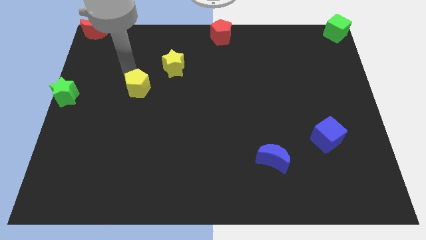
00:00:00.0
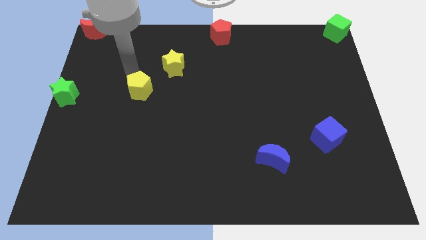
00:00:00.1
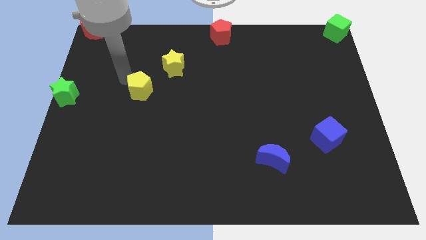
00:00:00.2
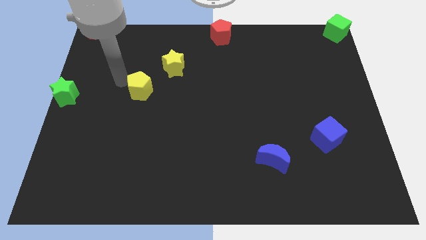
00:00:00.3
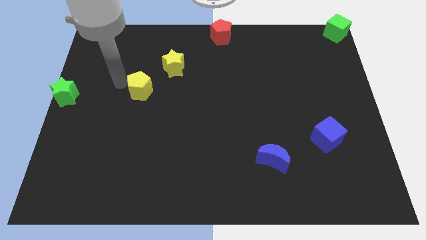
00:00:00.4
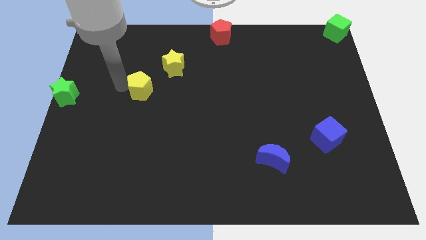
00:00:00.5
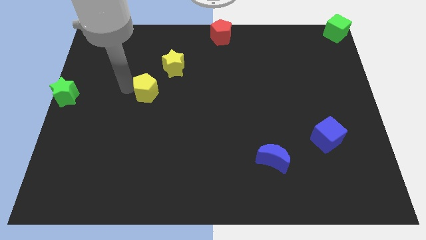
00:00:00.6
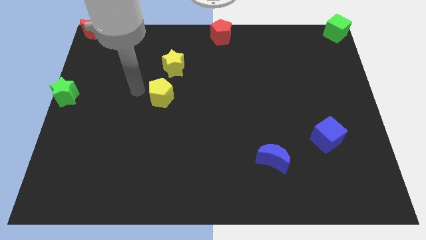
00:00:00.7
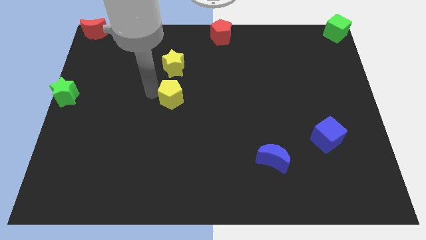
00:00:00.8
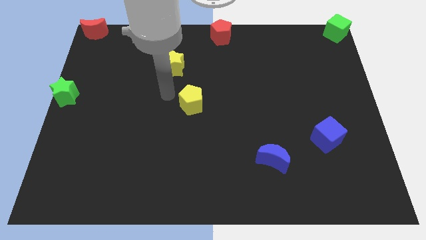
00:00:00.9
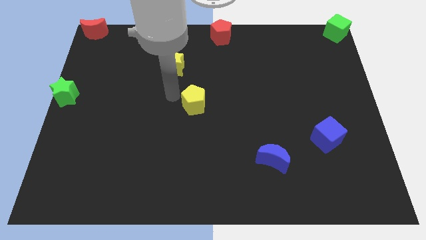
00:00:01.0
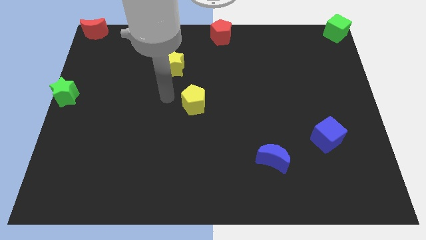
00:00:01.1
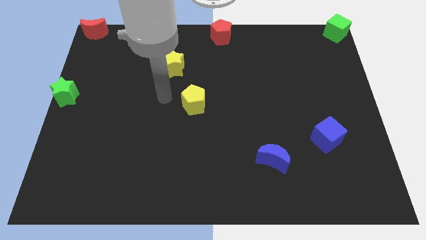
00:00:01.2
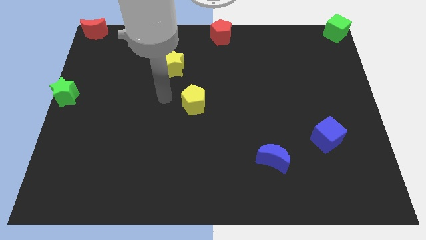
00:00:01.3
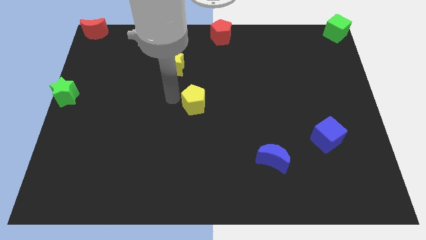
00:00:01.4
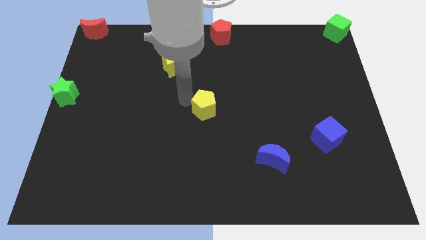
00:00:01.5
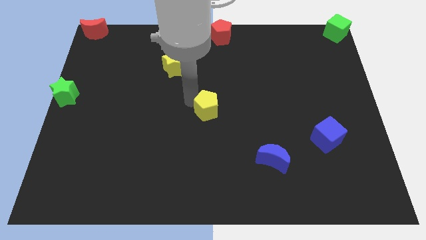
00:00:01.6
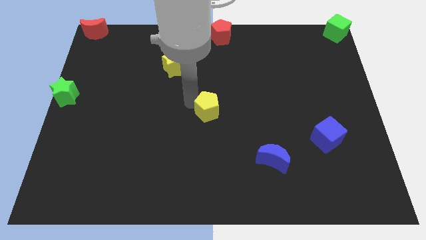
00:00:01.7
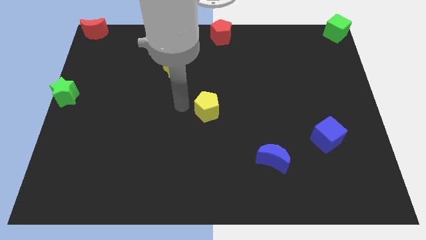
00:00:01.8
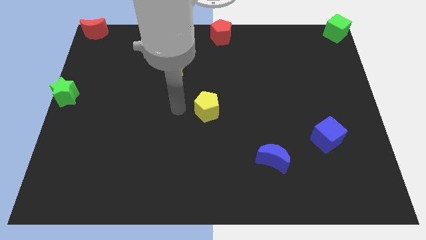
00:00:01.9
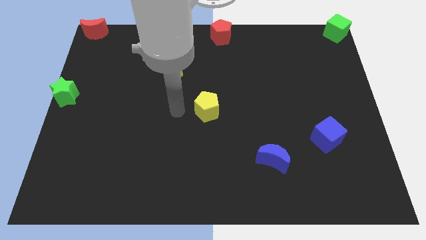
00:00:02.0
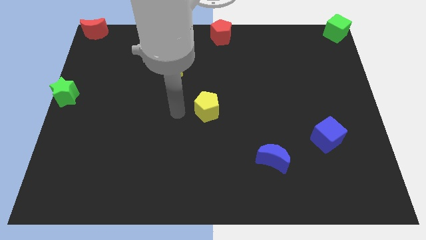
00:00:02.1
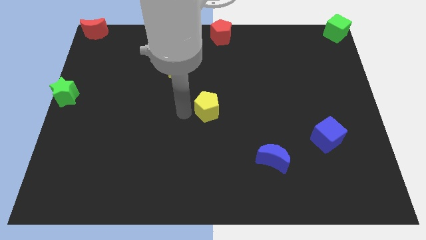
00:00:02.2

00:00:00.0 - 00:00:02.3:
move the yellow pentagon between blue moon and yellow star

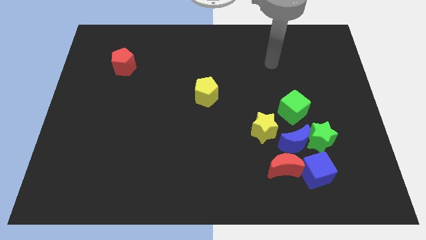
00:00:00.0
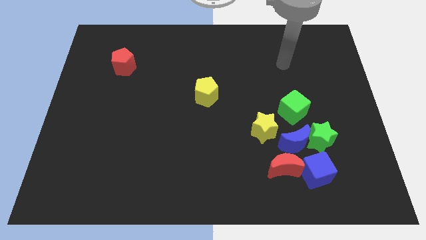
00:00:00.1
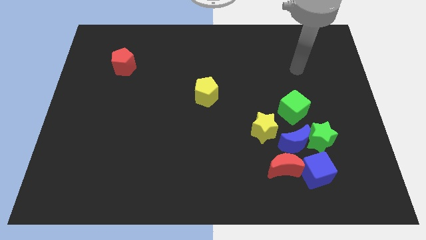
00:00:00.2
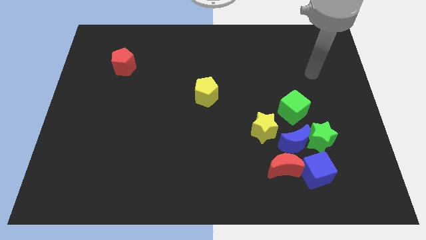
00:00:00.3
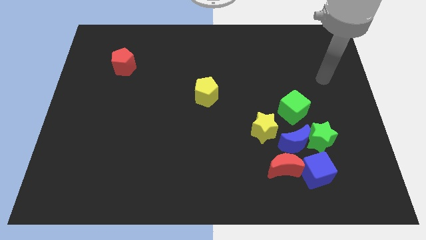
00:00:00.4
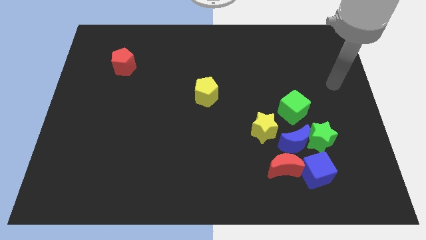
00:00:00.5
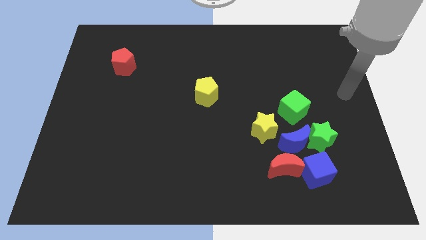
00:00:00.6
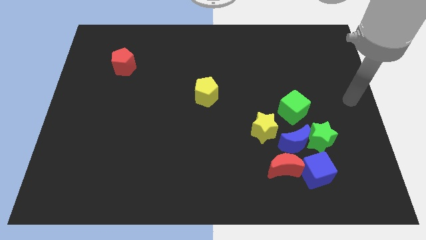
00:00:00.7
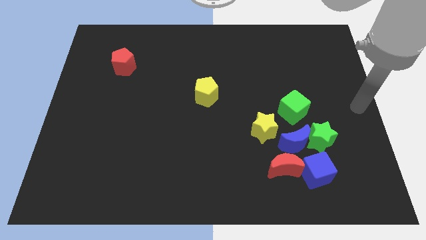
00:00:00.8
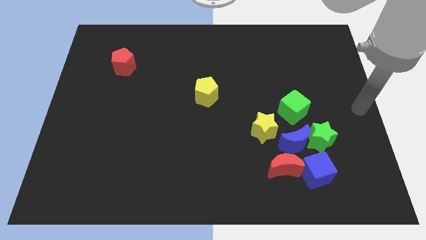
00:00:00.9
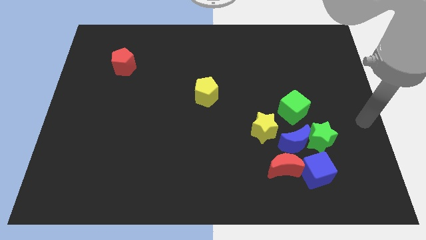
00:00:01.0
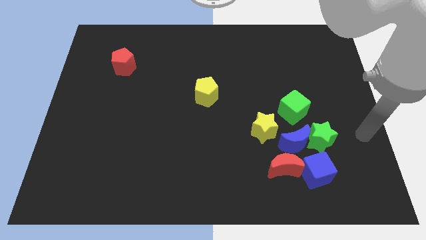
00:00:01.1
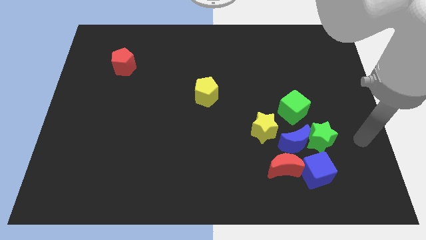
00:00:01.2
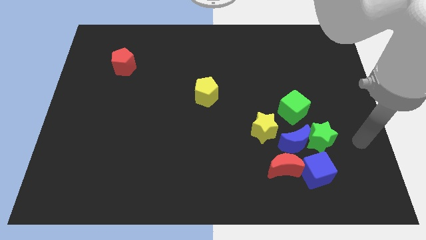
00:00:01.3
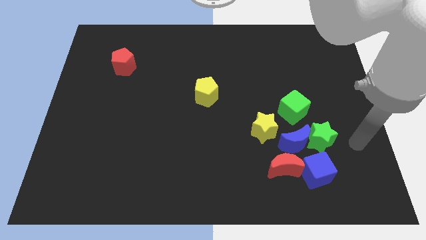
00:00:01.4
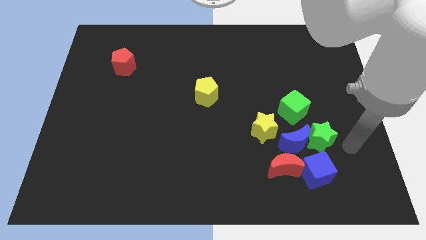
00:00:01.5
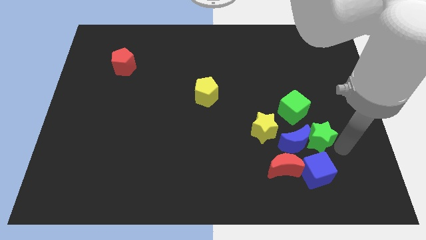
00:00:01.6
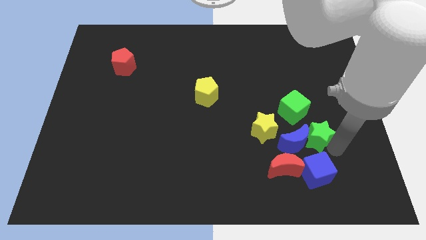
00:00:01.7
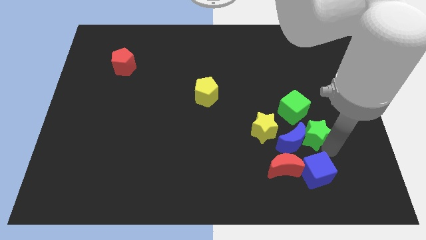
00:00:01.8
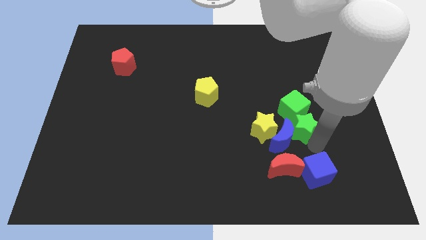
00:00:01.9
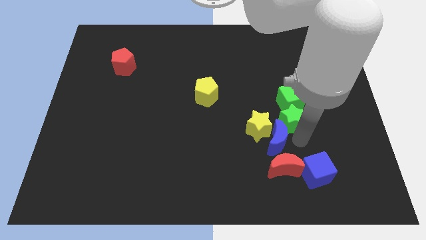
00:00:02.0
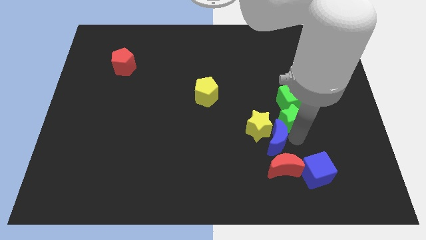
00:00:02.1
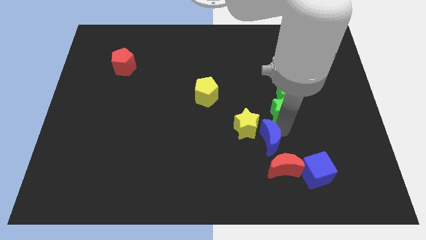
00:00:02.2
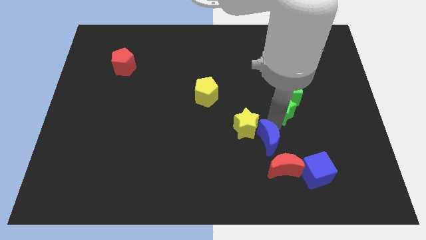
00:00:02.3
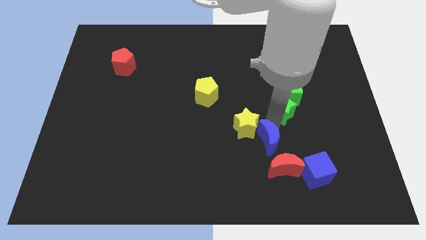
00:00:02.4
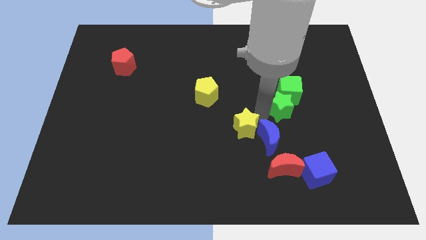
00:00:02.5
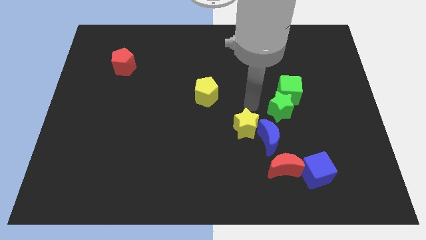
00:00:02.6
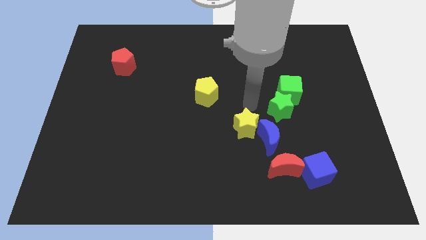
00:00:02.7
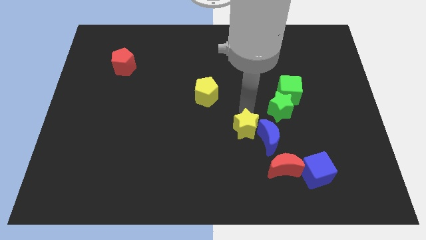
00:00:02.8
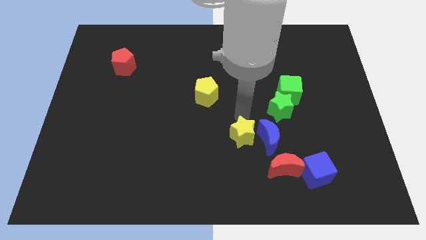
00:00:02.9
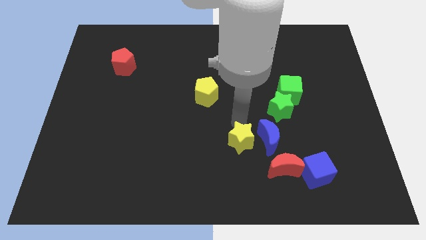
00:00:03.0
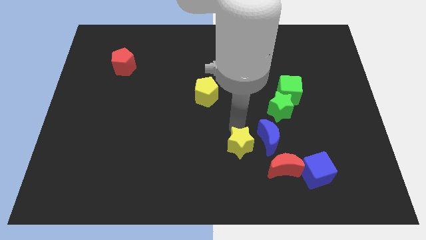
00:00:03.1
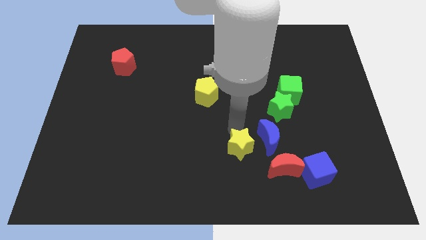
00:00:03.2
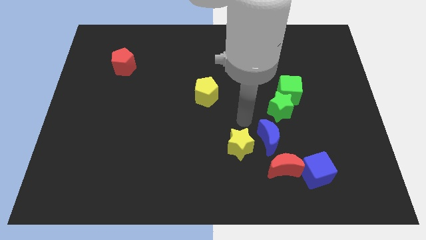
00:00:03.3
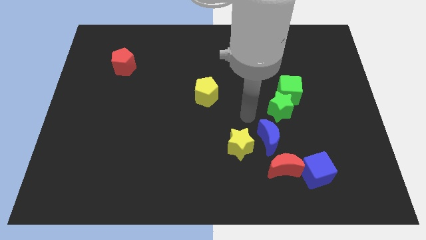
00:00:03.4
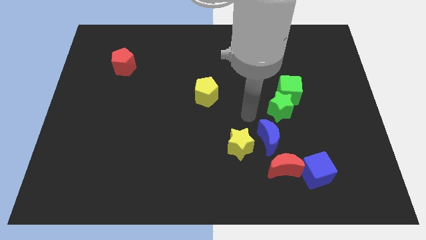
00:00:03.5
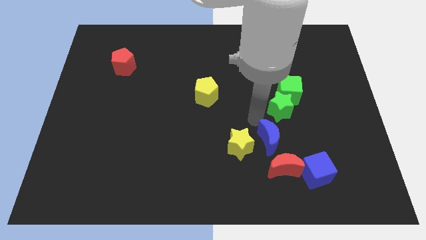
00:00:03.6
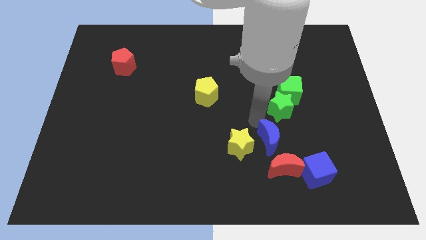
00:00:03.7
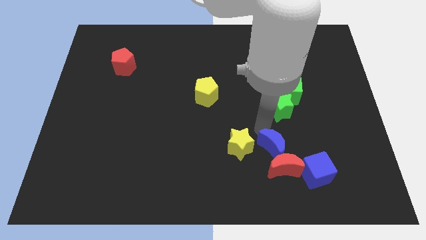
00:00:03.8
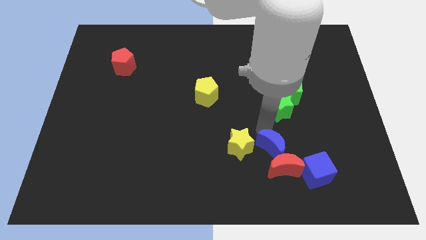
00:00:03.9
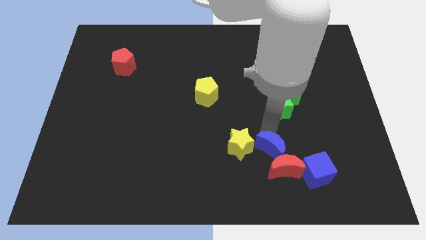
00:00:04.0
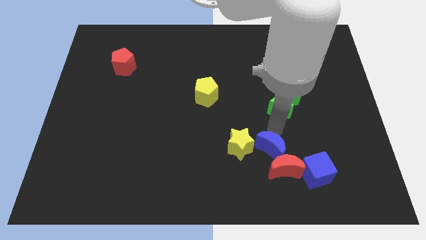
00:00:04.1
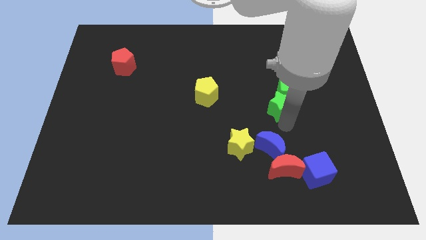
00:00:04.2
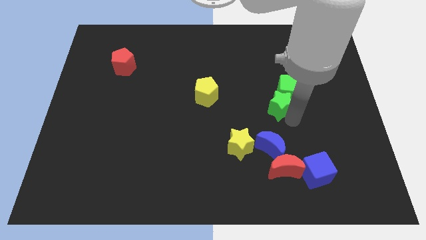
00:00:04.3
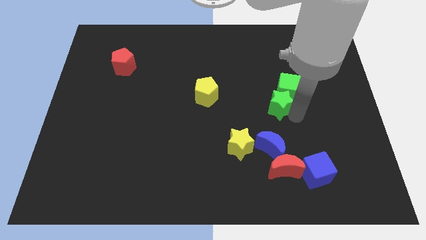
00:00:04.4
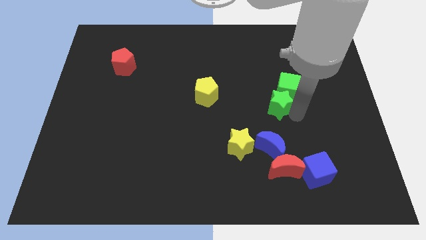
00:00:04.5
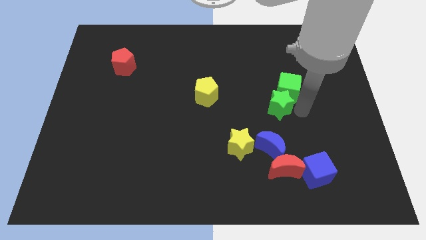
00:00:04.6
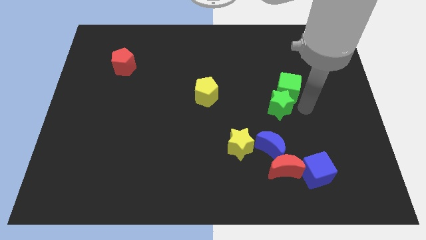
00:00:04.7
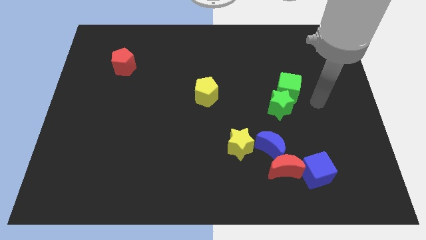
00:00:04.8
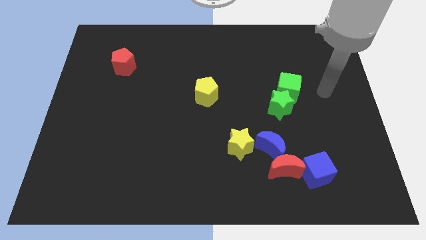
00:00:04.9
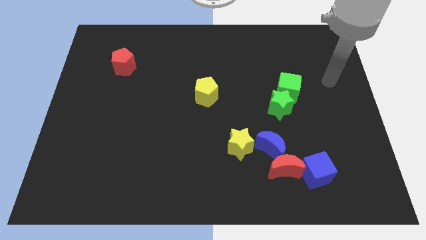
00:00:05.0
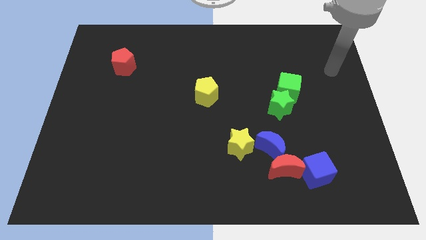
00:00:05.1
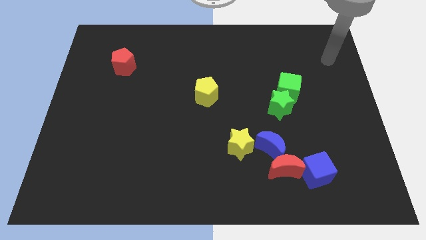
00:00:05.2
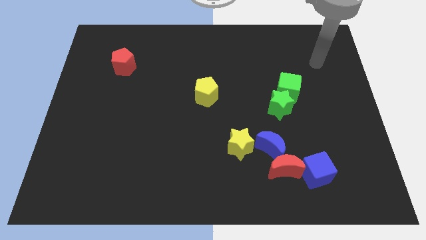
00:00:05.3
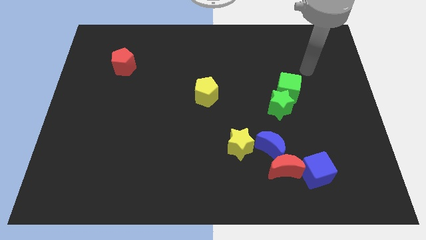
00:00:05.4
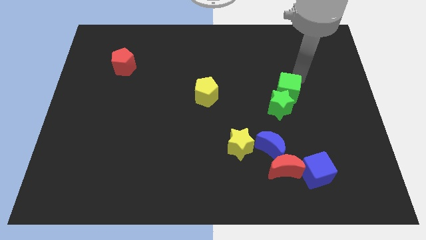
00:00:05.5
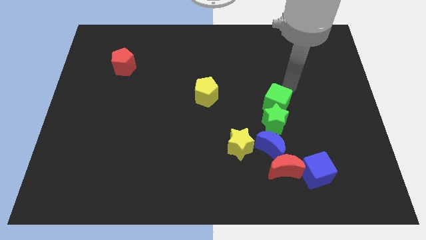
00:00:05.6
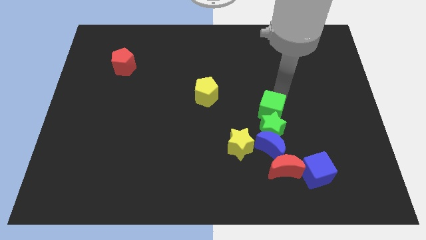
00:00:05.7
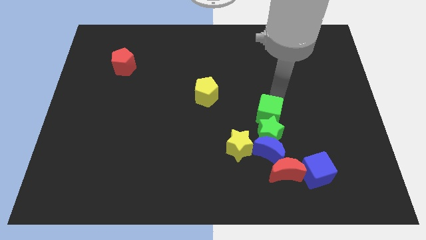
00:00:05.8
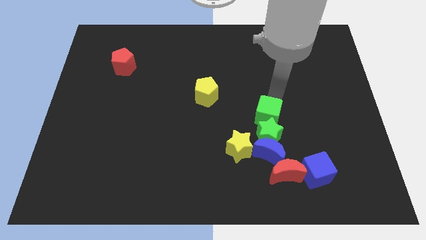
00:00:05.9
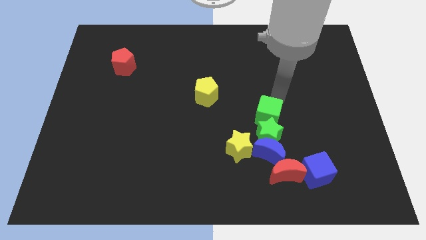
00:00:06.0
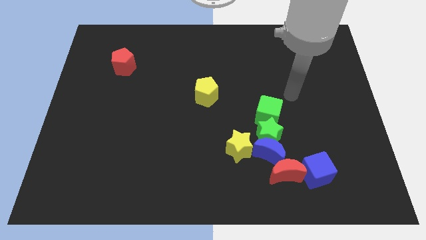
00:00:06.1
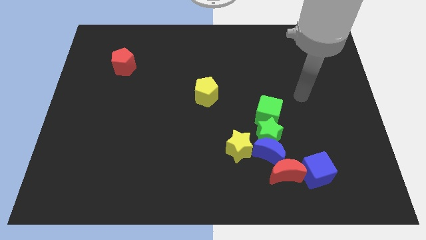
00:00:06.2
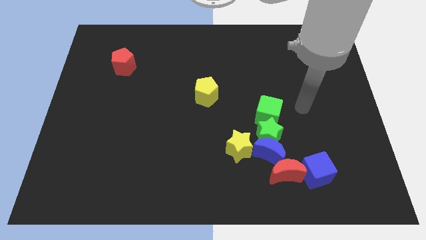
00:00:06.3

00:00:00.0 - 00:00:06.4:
group up the green blocks yellow star red moon blue moon and blue cube at the right side of the board

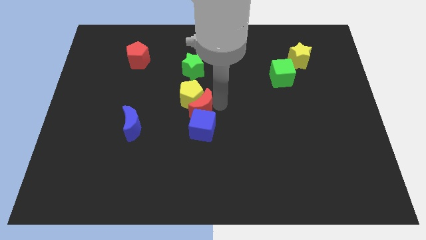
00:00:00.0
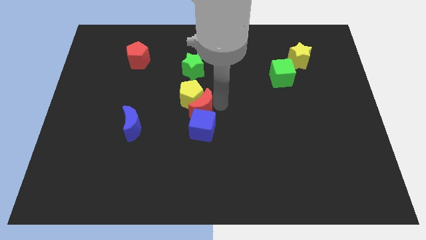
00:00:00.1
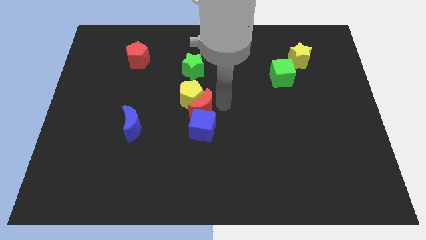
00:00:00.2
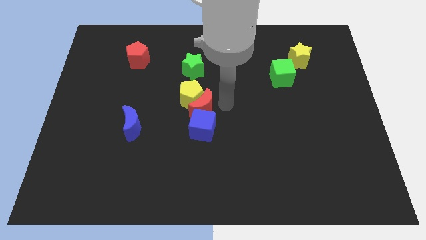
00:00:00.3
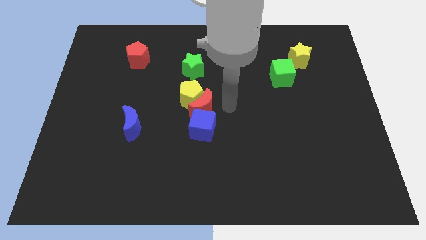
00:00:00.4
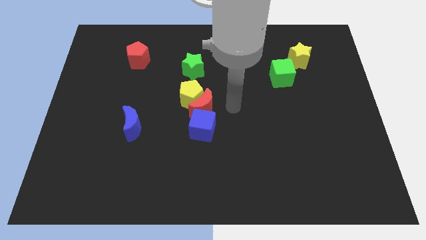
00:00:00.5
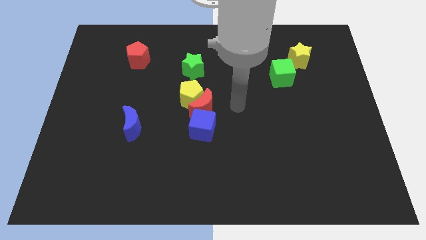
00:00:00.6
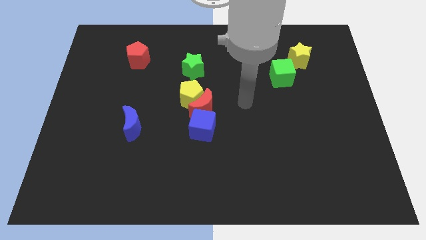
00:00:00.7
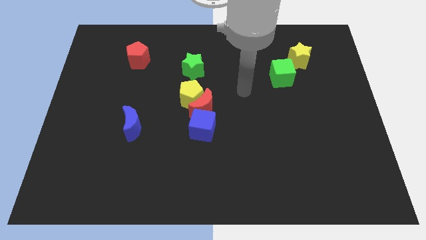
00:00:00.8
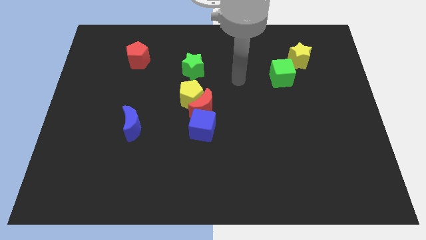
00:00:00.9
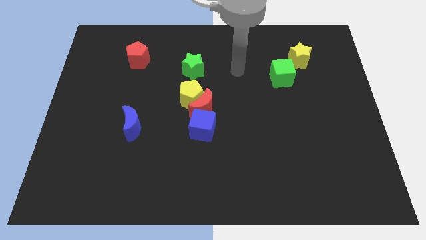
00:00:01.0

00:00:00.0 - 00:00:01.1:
move your hand in between the green blocks
